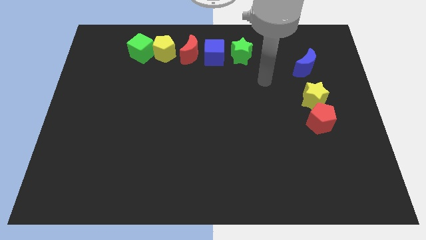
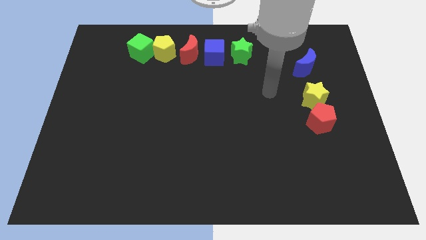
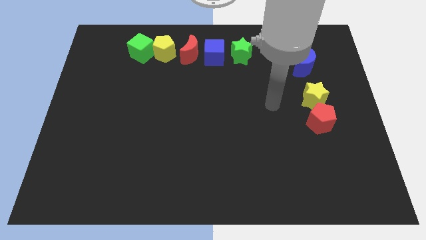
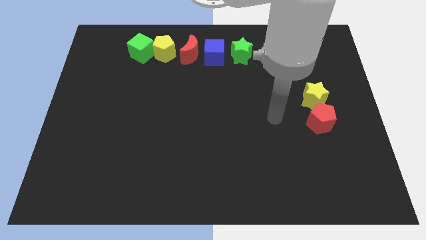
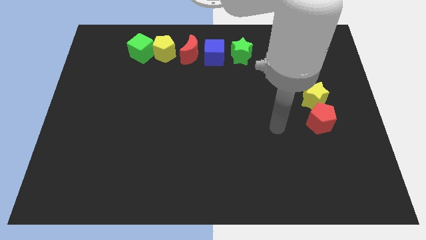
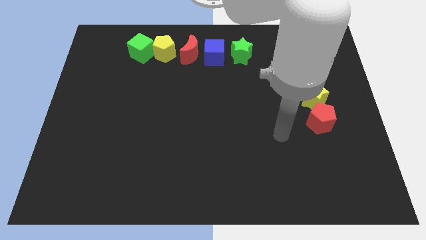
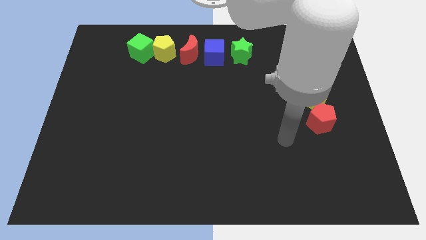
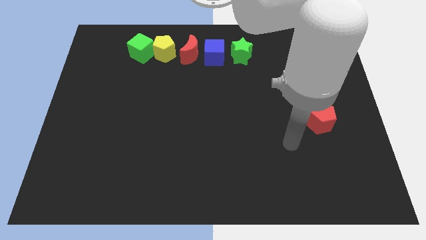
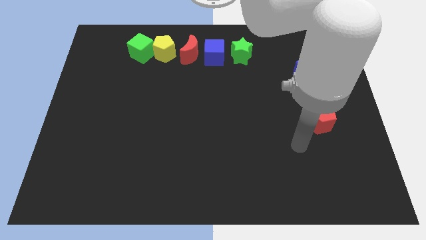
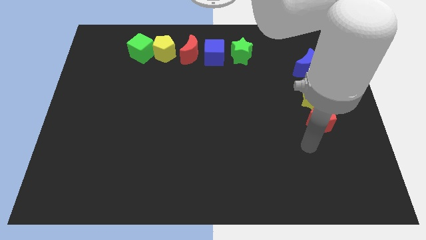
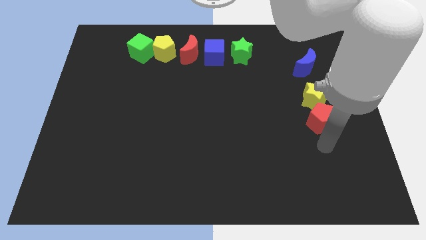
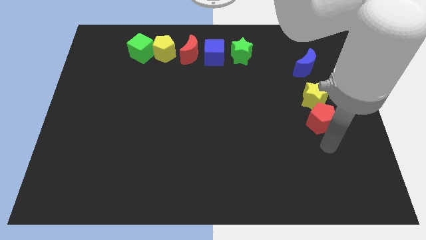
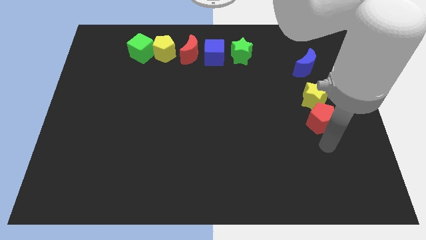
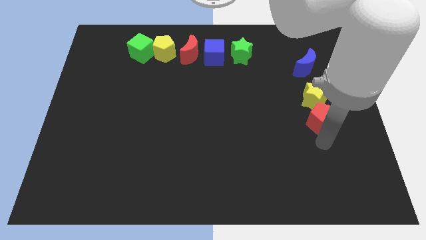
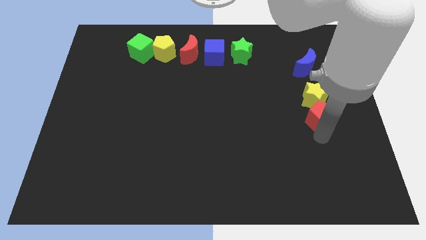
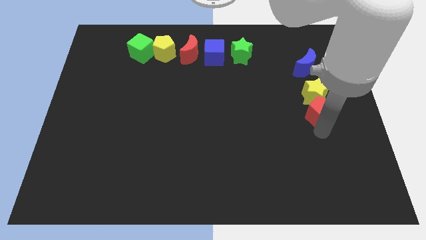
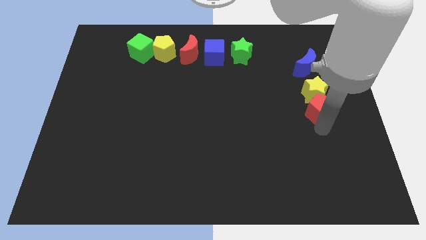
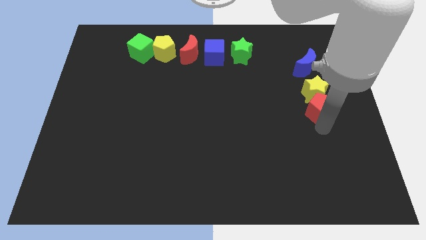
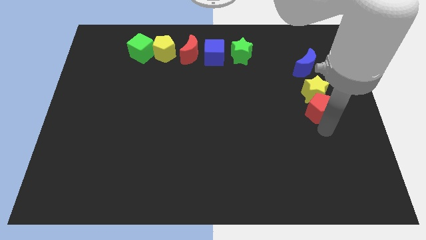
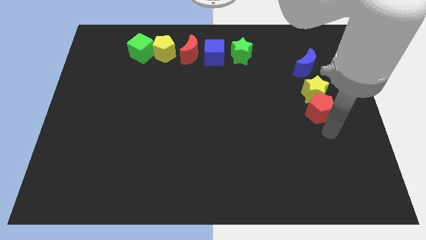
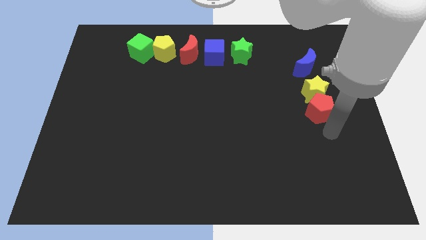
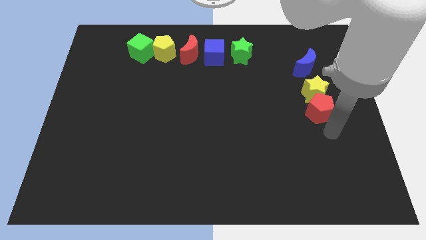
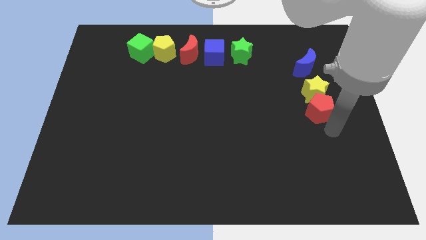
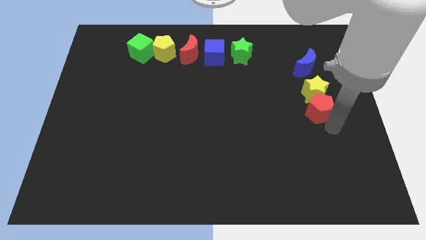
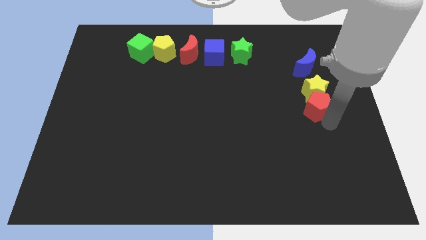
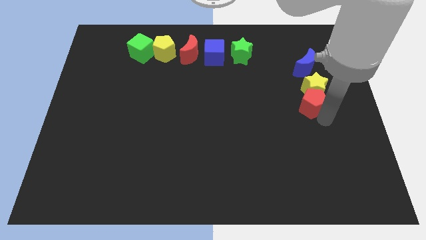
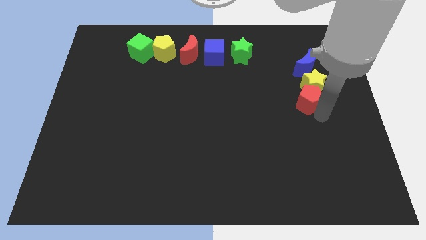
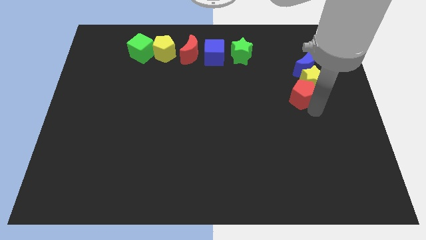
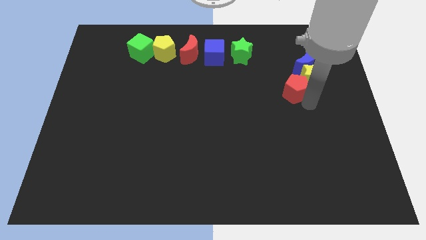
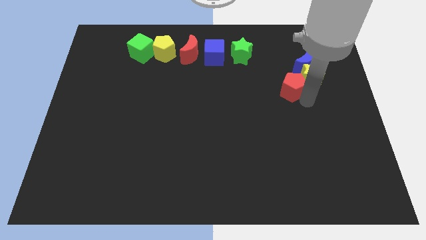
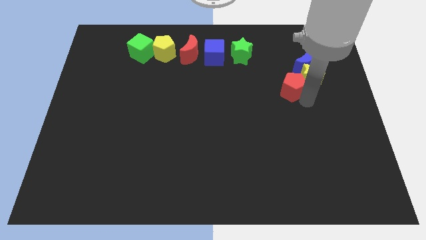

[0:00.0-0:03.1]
push the red pentagon to the left of the yellow star

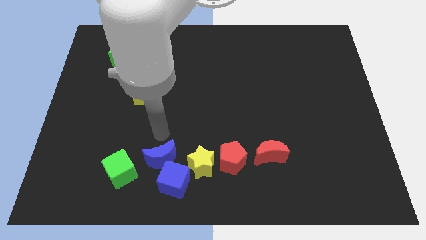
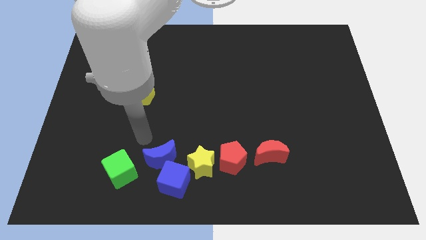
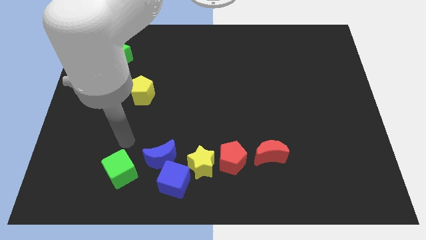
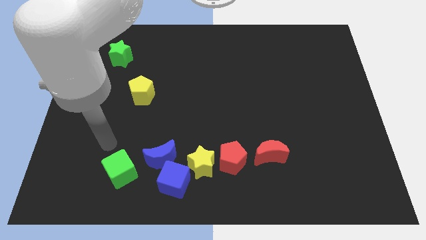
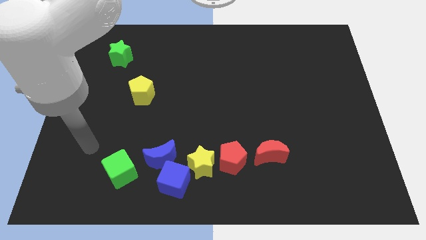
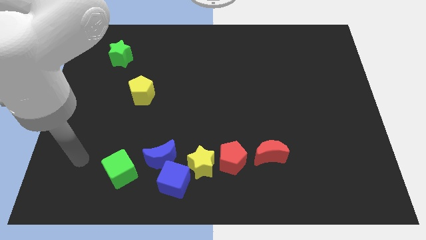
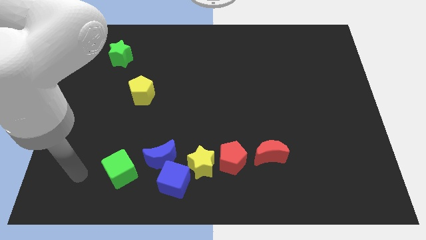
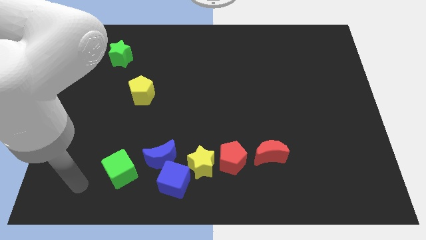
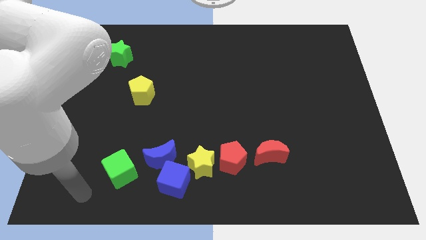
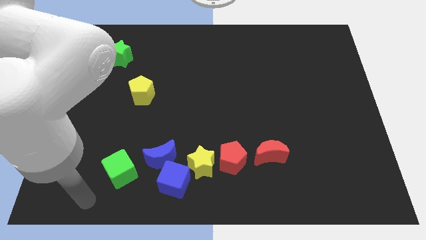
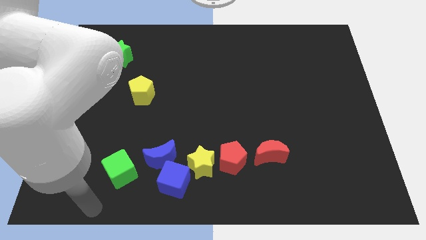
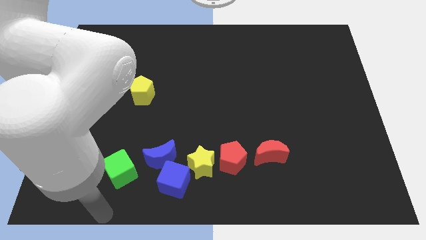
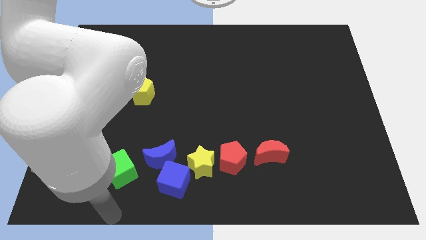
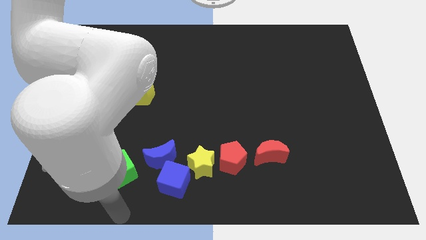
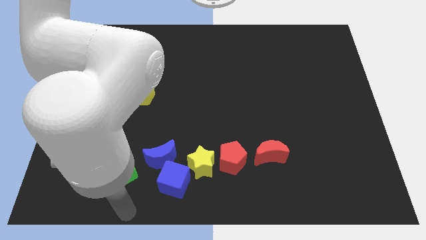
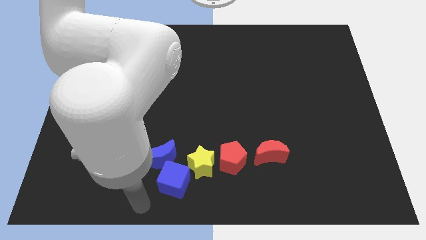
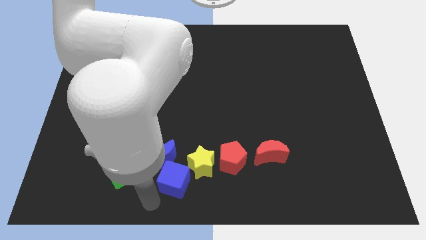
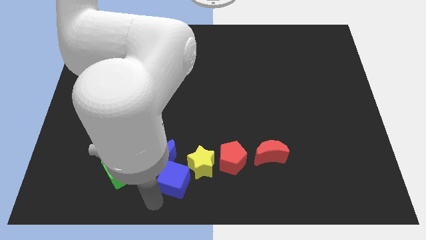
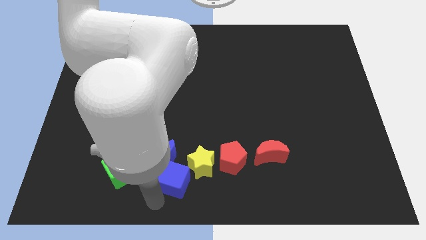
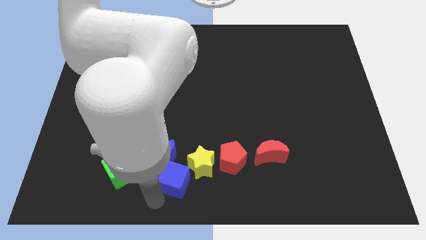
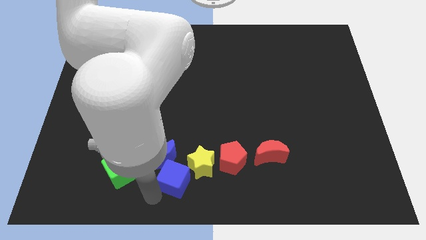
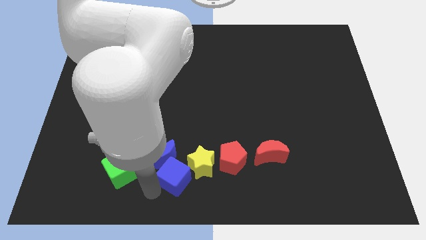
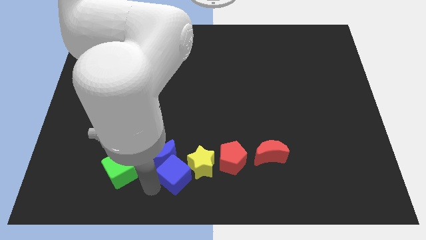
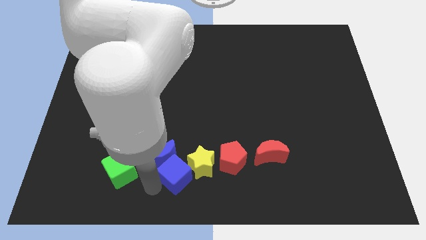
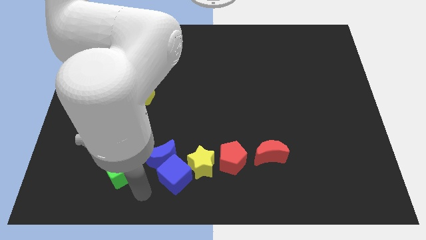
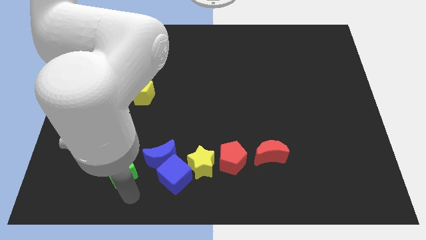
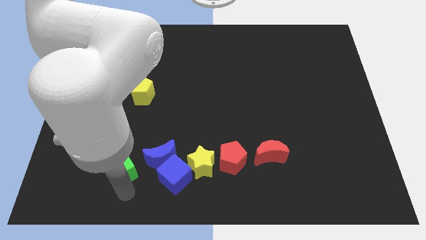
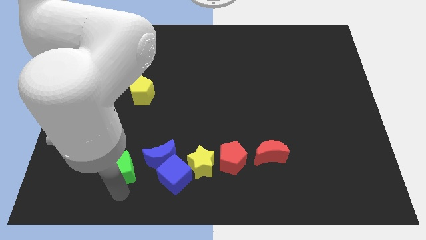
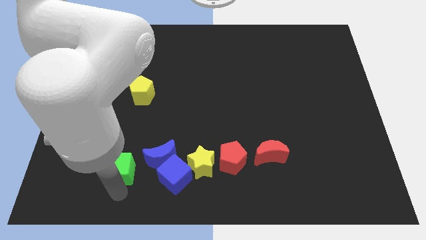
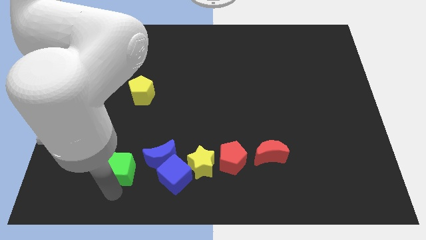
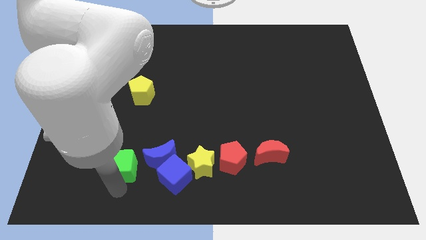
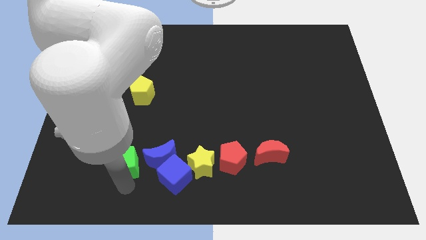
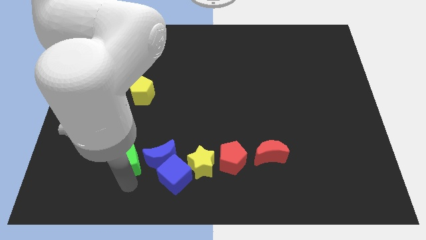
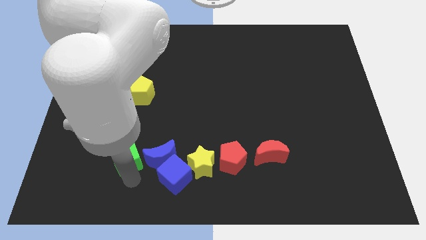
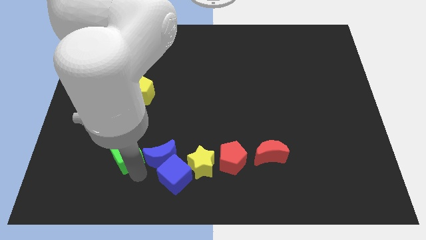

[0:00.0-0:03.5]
push green cube beside blue moon

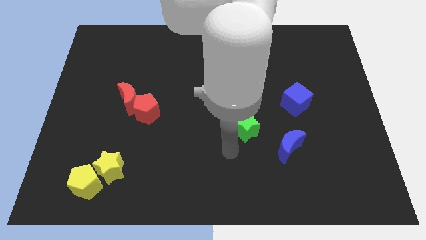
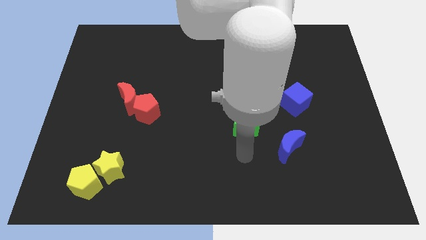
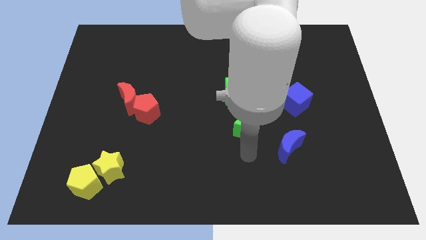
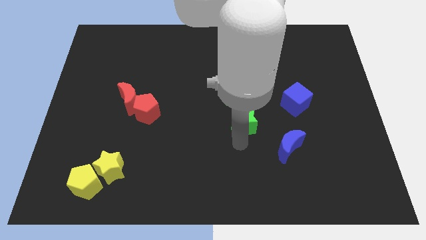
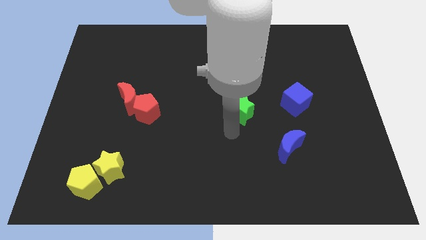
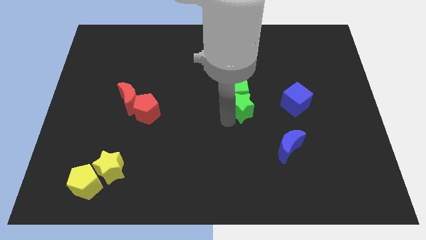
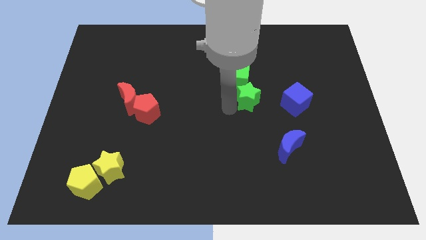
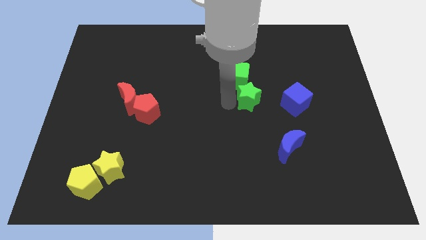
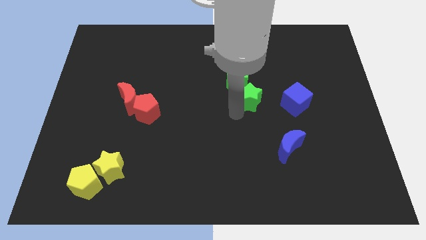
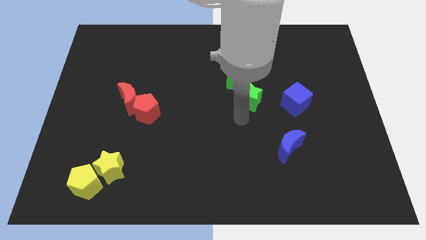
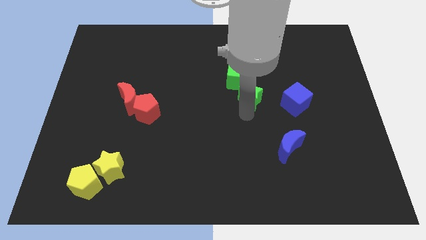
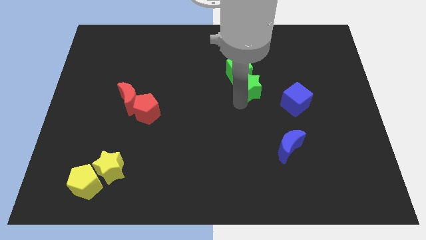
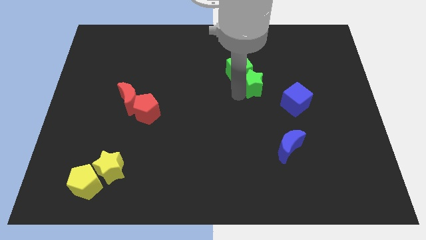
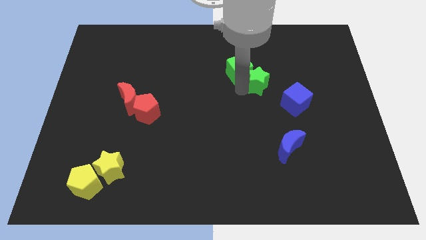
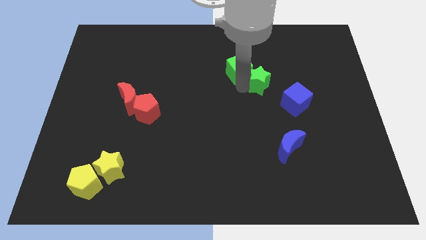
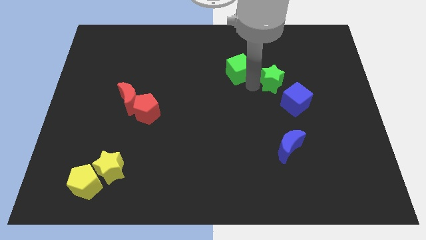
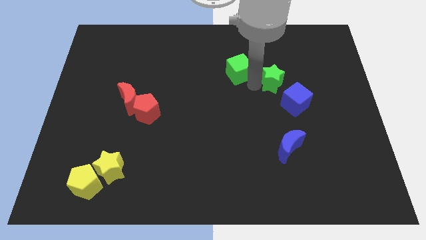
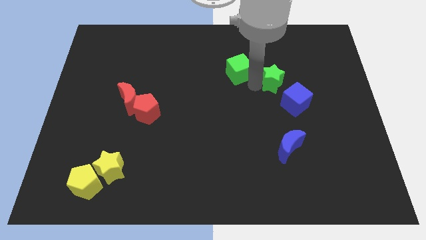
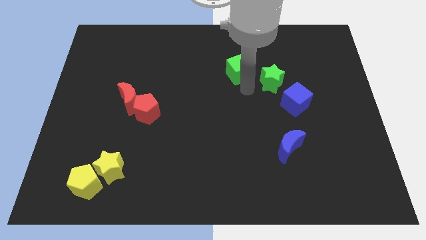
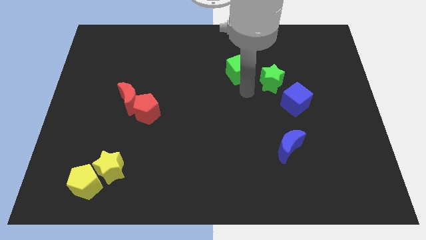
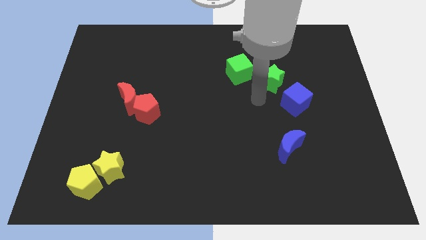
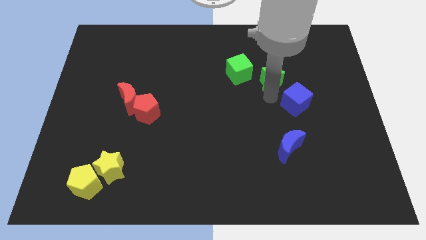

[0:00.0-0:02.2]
slightly move green star beside green cube

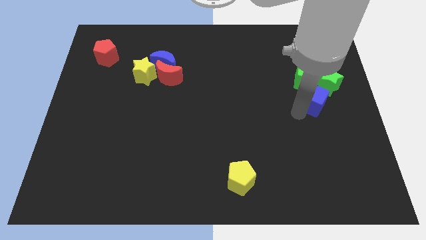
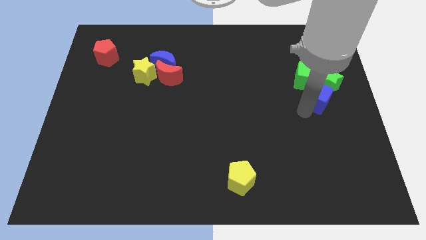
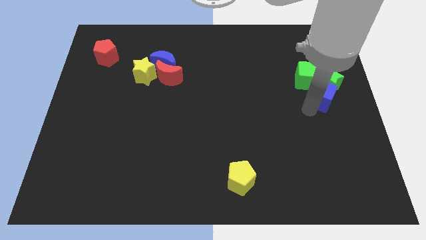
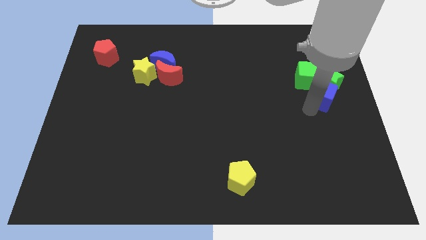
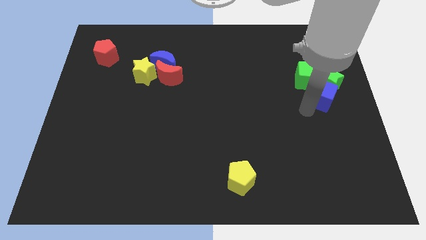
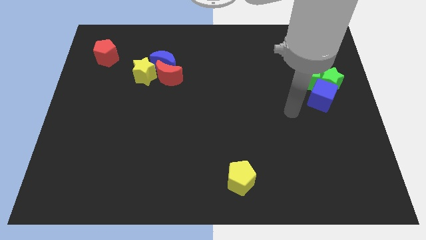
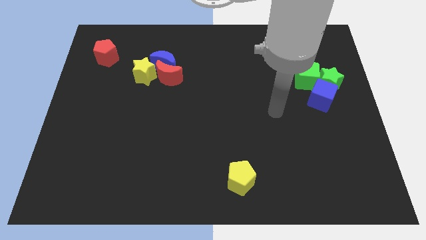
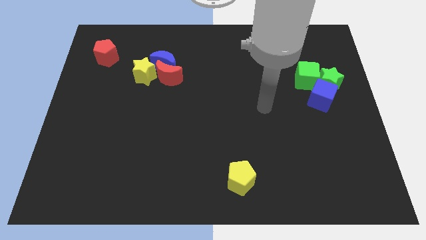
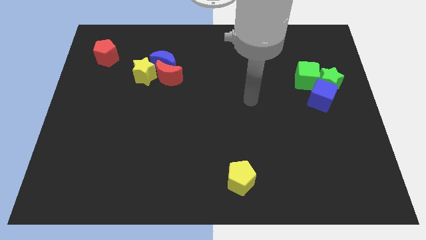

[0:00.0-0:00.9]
push the blue cube into green green star
